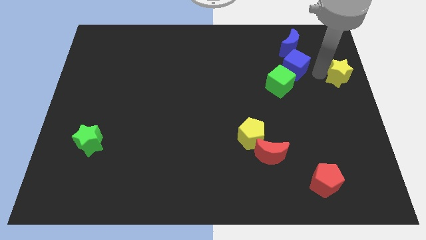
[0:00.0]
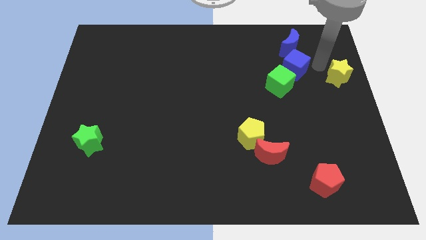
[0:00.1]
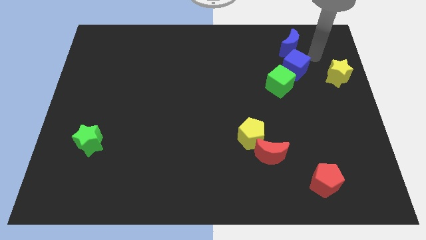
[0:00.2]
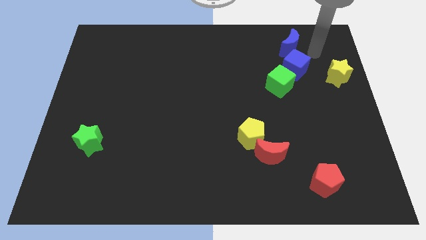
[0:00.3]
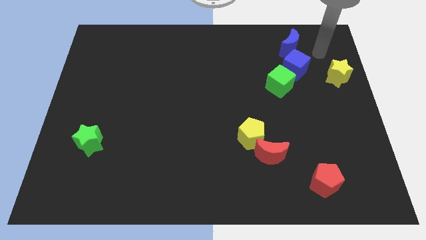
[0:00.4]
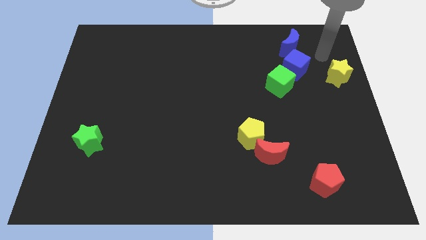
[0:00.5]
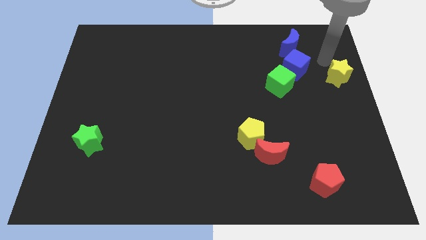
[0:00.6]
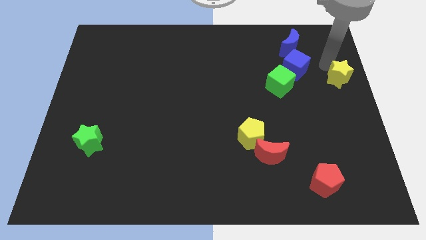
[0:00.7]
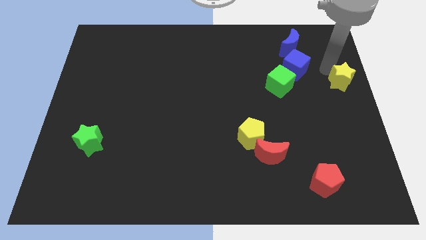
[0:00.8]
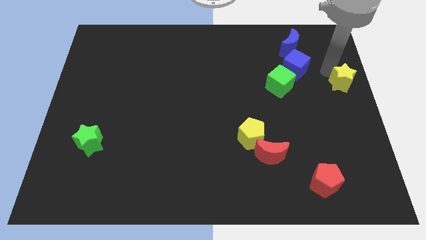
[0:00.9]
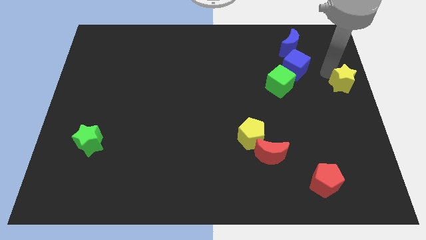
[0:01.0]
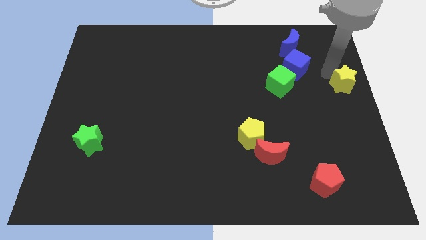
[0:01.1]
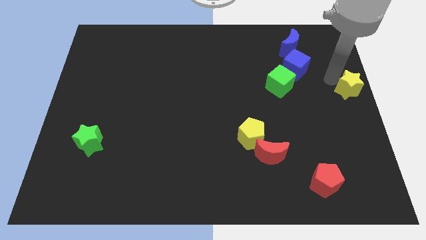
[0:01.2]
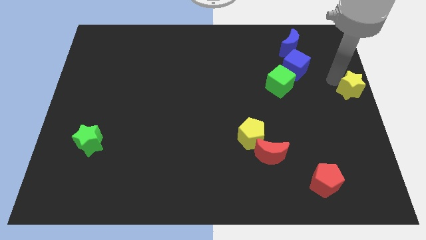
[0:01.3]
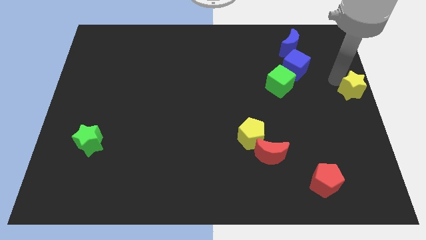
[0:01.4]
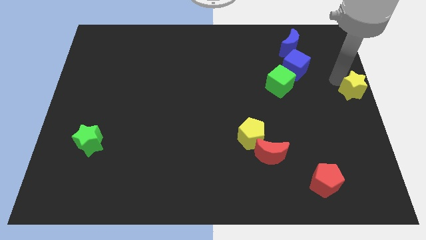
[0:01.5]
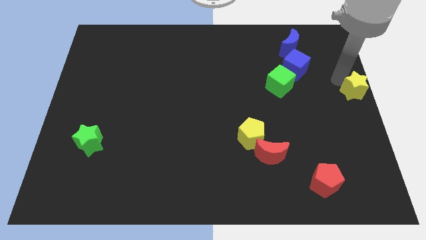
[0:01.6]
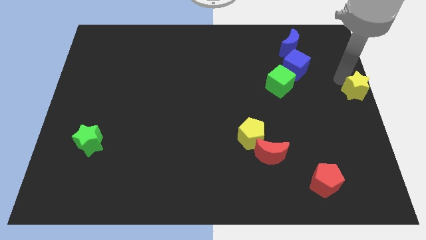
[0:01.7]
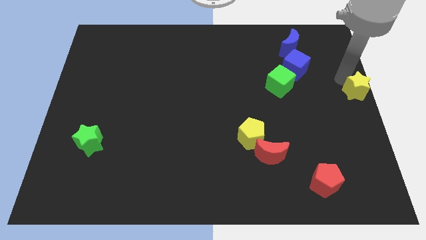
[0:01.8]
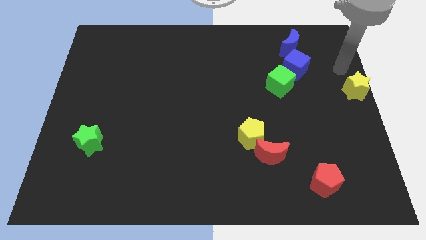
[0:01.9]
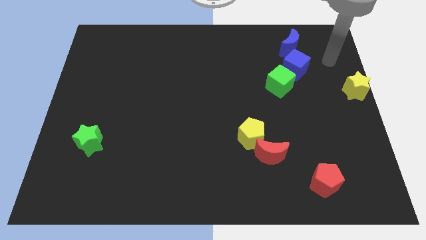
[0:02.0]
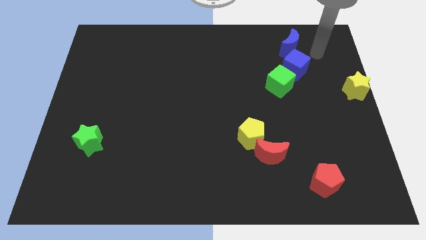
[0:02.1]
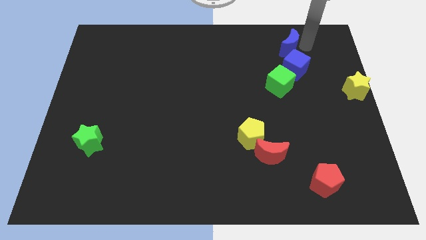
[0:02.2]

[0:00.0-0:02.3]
place the yellow star parallel to the right of the green cube

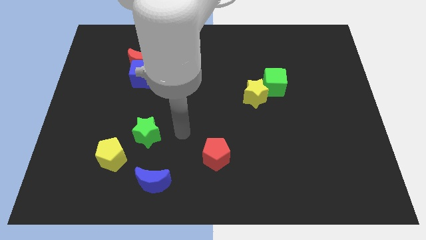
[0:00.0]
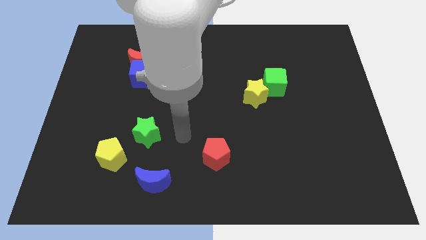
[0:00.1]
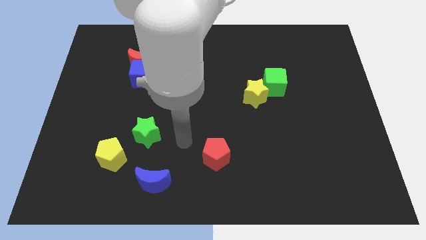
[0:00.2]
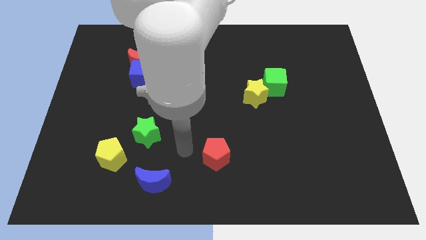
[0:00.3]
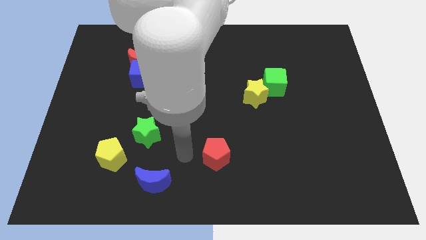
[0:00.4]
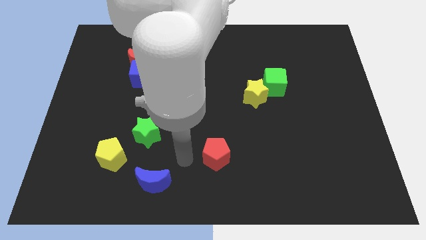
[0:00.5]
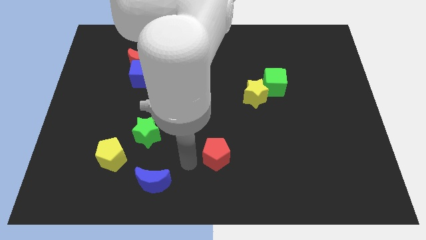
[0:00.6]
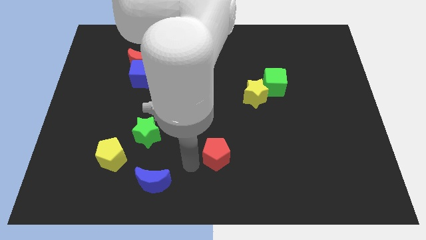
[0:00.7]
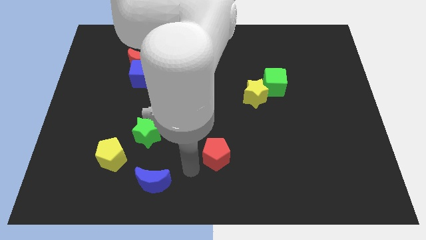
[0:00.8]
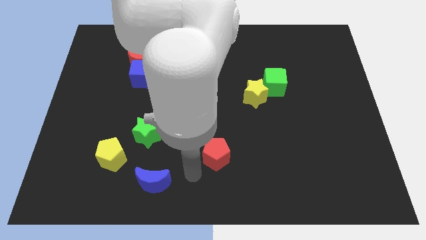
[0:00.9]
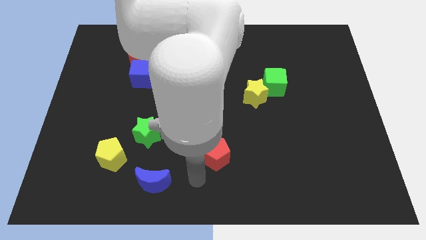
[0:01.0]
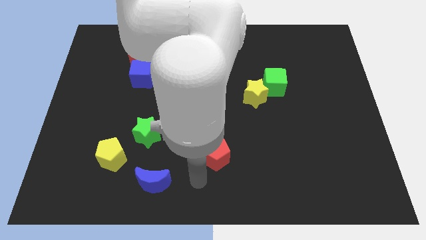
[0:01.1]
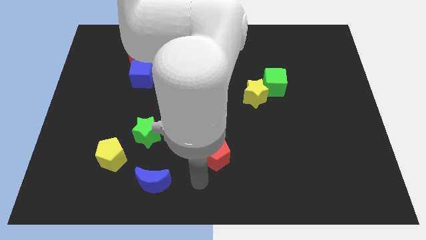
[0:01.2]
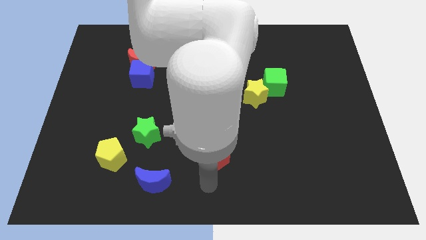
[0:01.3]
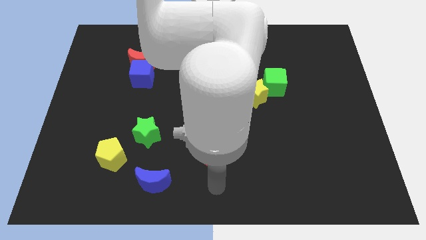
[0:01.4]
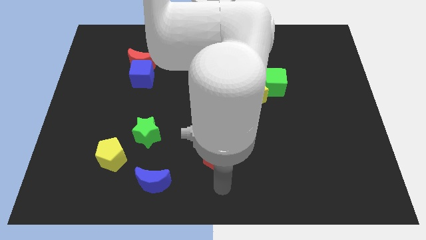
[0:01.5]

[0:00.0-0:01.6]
place your arm below the red pentagon

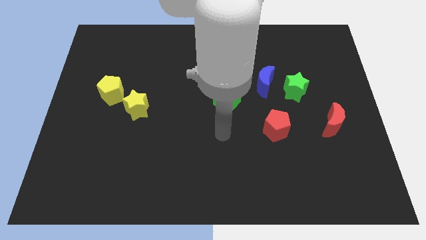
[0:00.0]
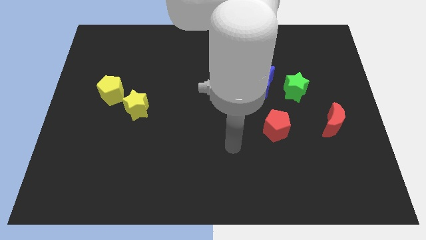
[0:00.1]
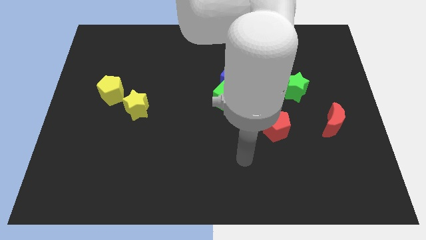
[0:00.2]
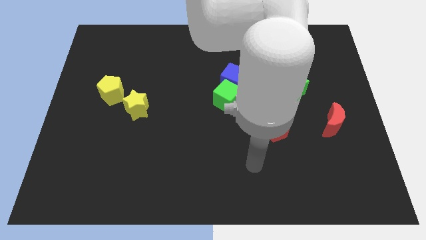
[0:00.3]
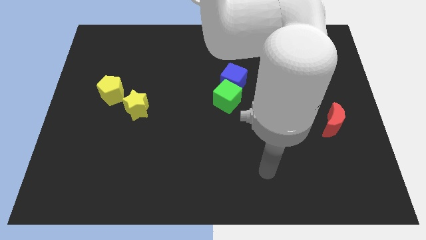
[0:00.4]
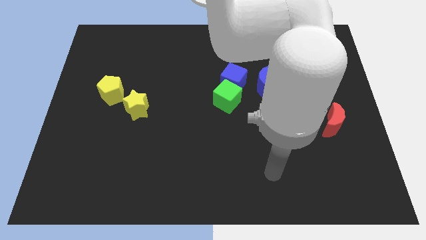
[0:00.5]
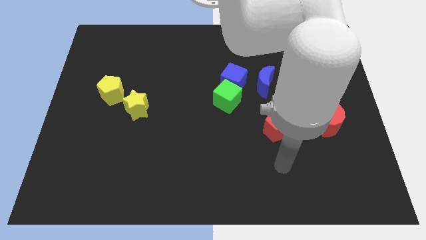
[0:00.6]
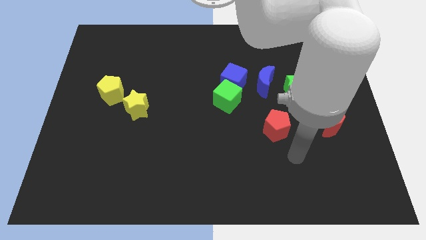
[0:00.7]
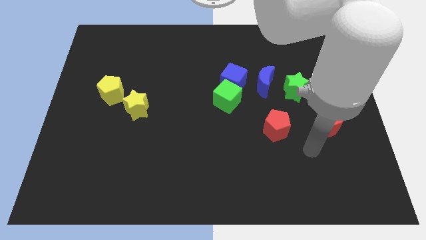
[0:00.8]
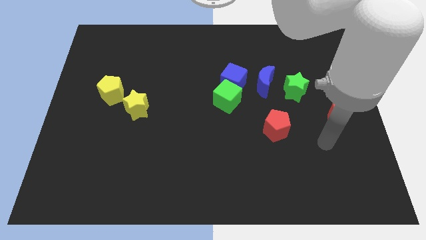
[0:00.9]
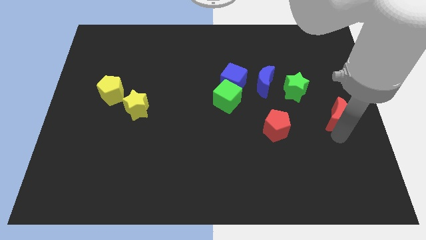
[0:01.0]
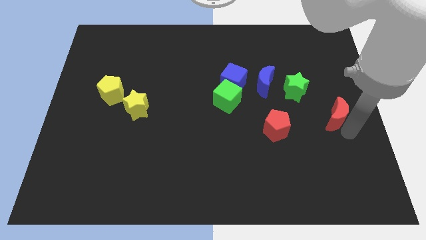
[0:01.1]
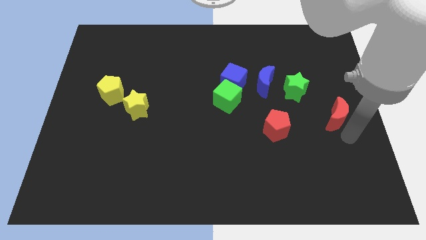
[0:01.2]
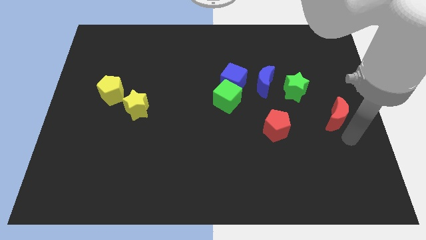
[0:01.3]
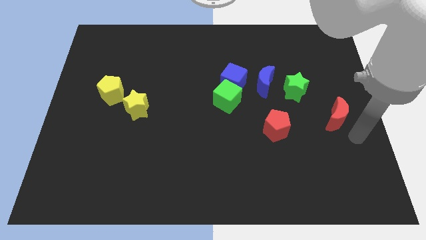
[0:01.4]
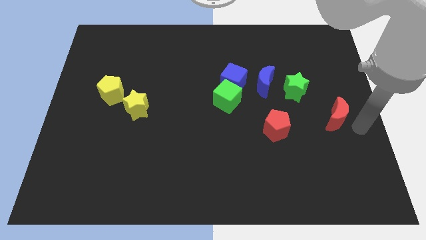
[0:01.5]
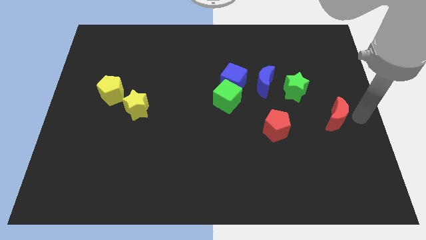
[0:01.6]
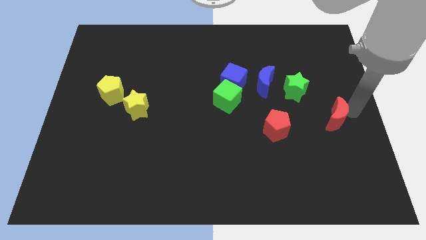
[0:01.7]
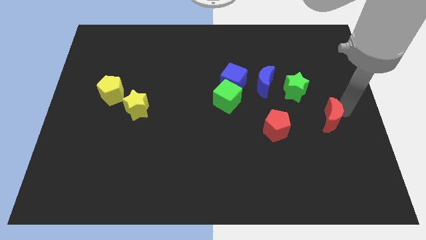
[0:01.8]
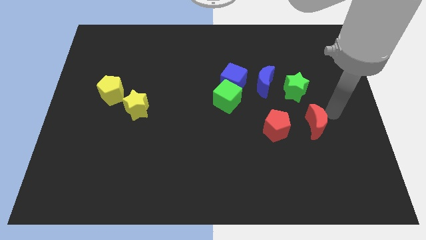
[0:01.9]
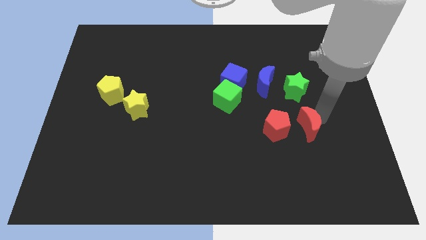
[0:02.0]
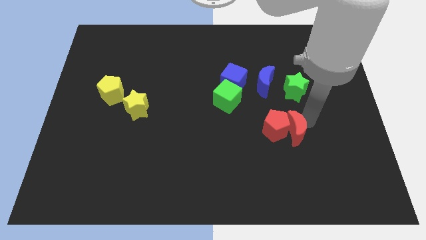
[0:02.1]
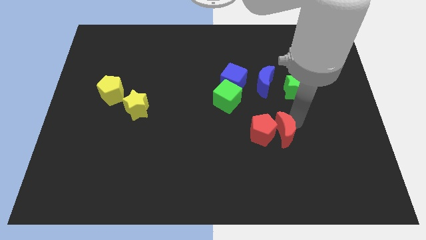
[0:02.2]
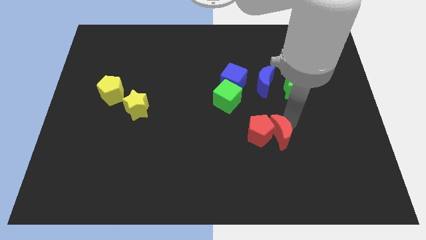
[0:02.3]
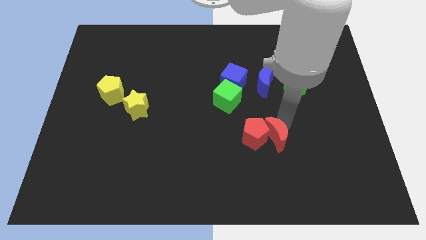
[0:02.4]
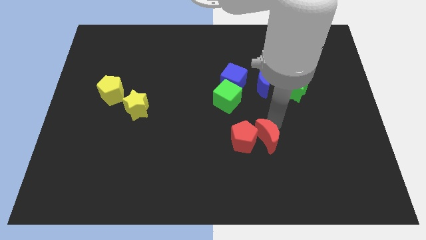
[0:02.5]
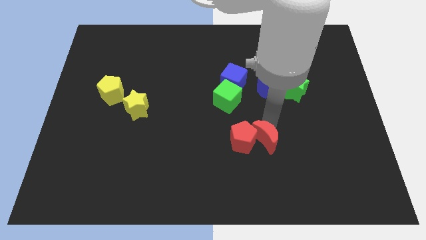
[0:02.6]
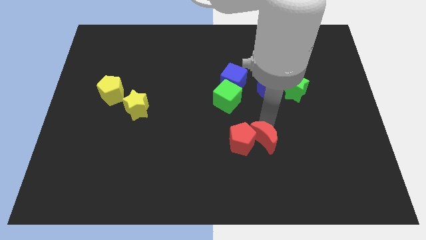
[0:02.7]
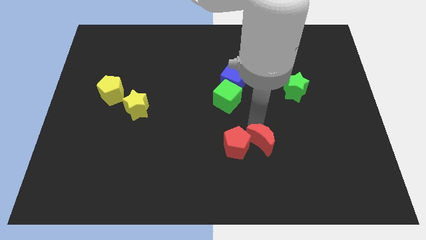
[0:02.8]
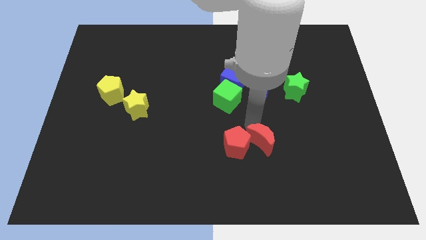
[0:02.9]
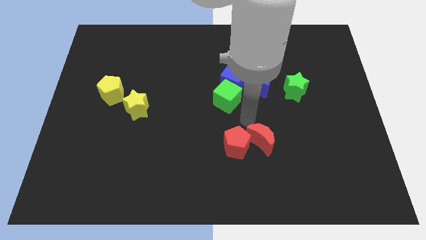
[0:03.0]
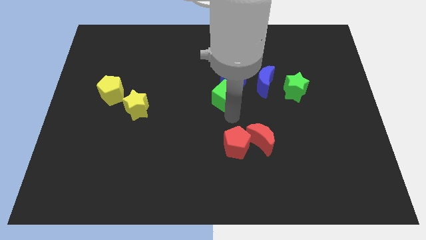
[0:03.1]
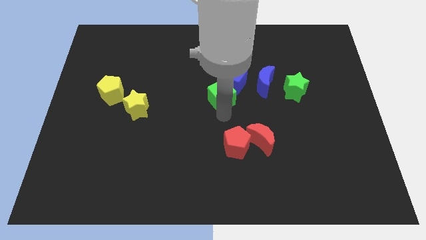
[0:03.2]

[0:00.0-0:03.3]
push the red crescent into the red pentagon

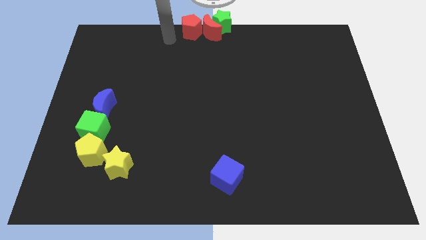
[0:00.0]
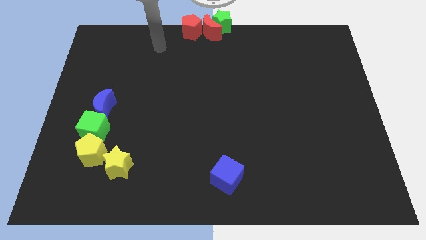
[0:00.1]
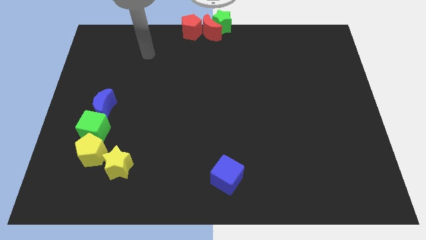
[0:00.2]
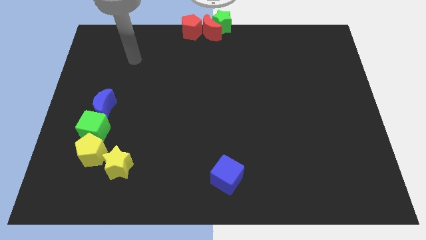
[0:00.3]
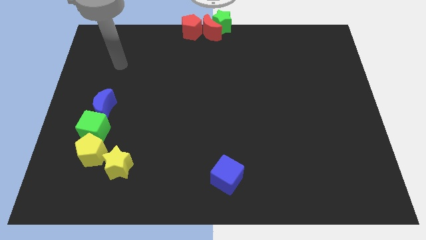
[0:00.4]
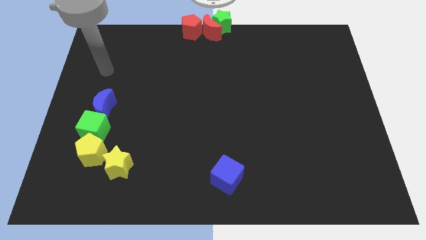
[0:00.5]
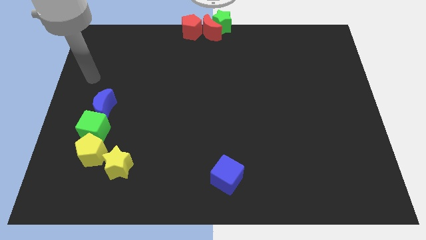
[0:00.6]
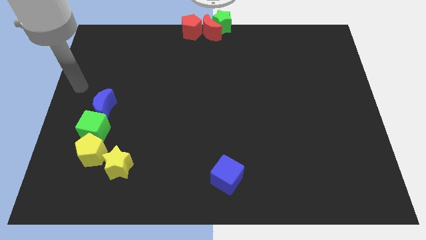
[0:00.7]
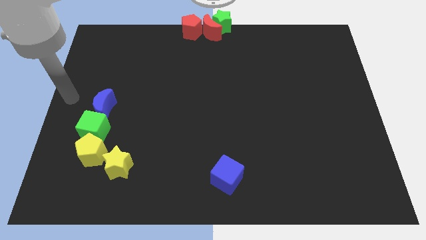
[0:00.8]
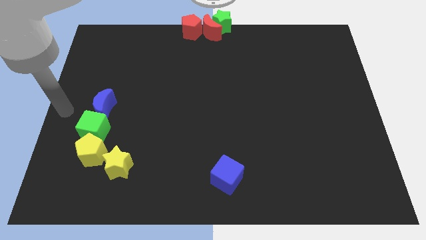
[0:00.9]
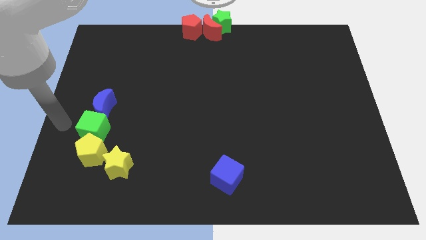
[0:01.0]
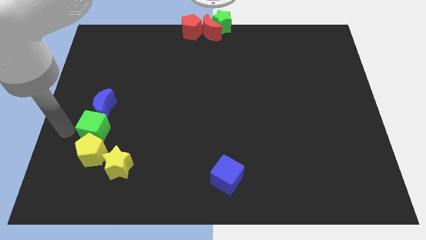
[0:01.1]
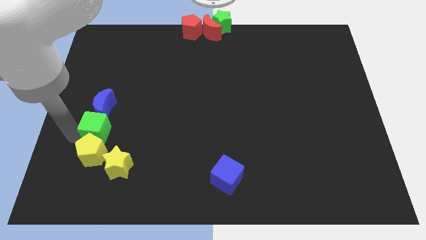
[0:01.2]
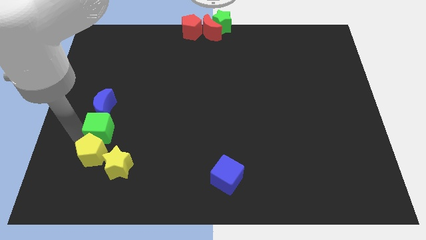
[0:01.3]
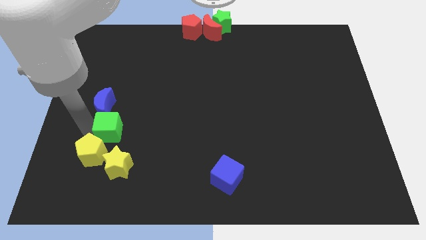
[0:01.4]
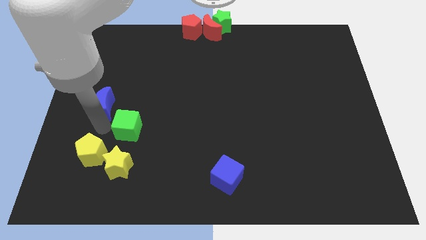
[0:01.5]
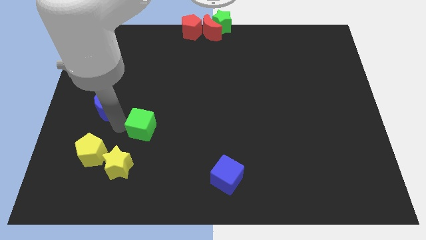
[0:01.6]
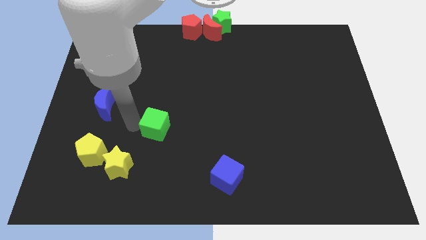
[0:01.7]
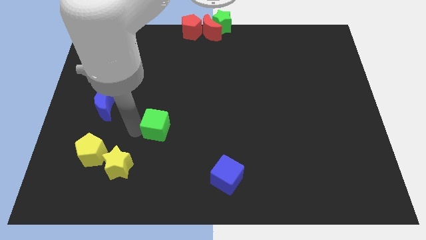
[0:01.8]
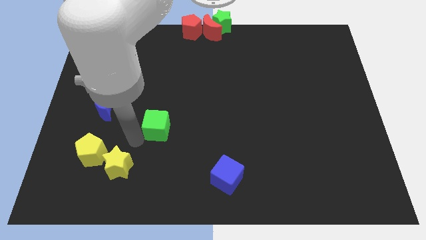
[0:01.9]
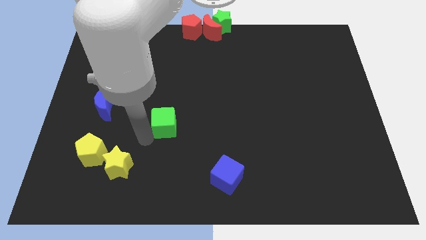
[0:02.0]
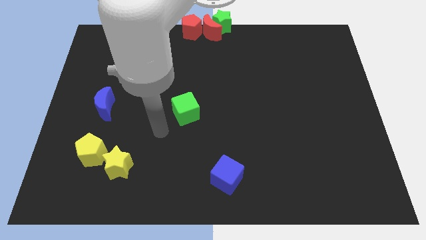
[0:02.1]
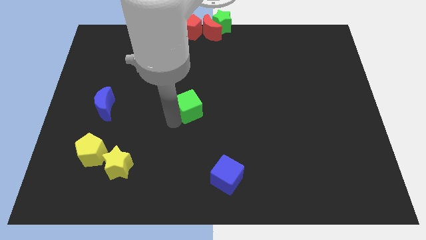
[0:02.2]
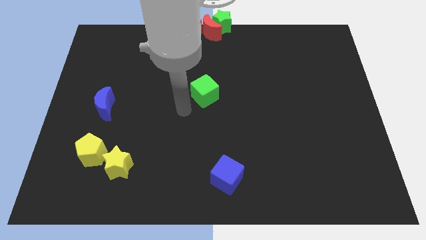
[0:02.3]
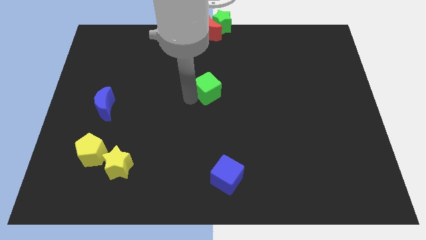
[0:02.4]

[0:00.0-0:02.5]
move green cube towards the center of the board
